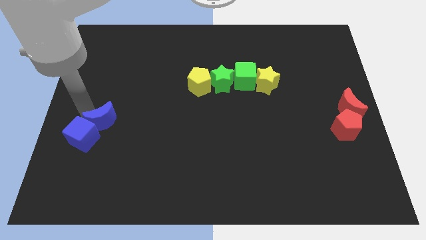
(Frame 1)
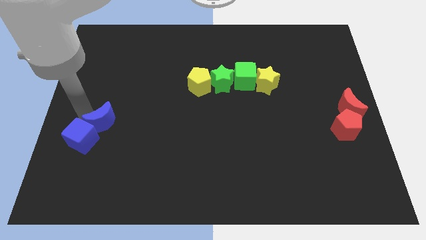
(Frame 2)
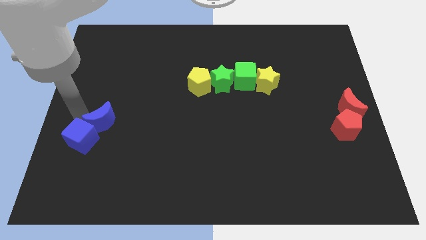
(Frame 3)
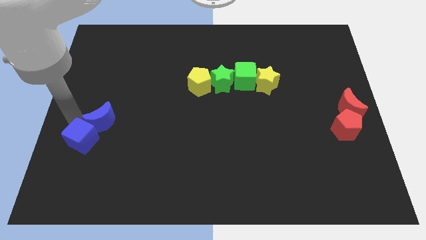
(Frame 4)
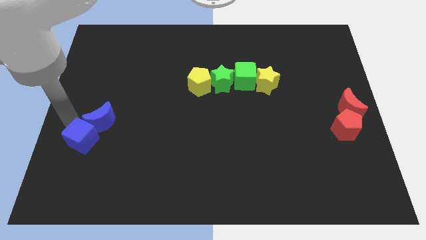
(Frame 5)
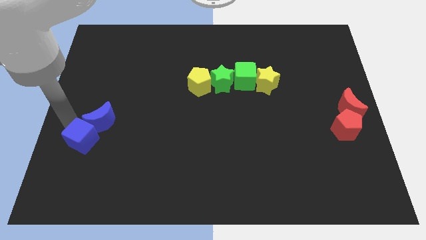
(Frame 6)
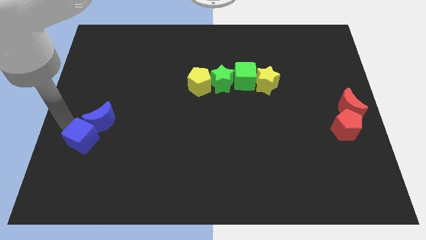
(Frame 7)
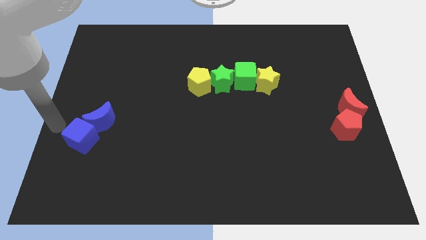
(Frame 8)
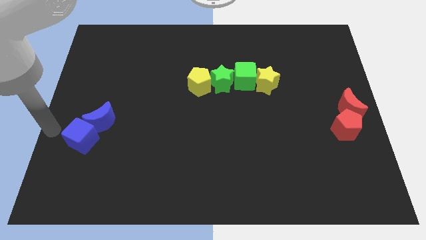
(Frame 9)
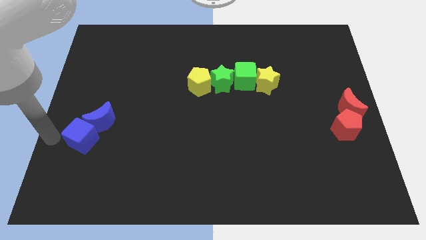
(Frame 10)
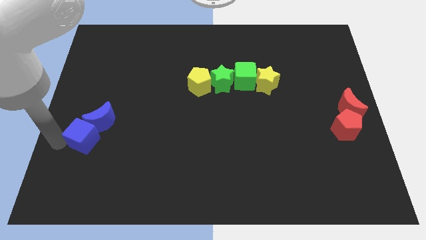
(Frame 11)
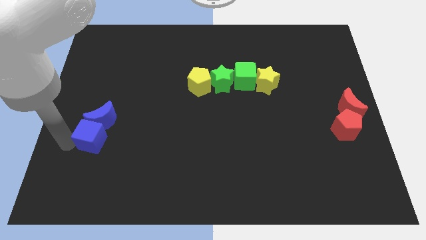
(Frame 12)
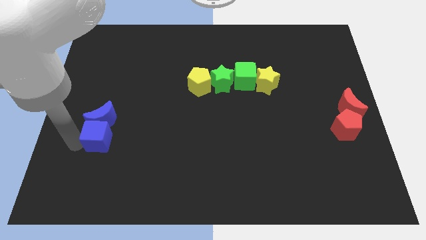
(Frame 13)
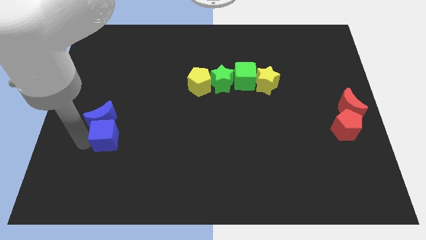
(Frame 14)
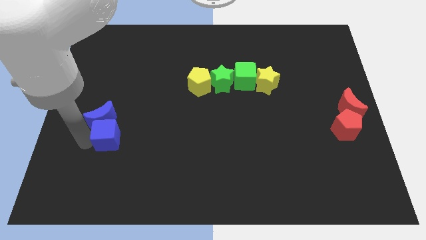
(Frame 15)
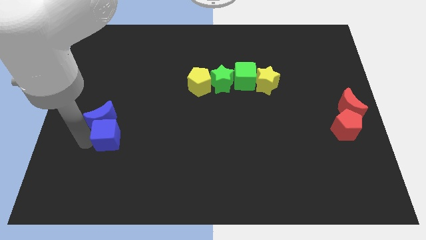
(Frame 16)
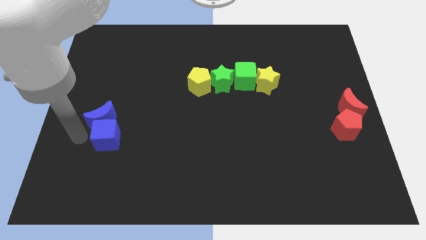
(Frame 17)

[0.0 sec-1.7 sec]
place the blue cube below the blue crescent

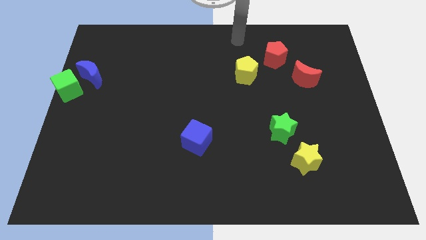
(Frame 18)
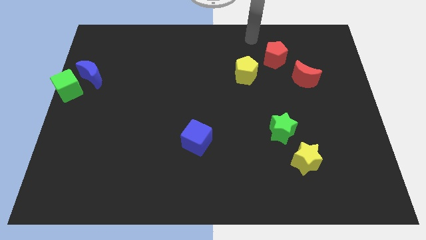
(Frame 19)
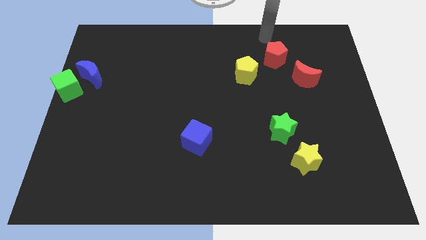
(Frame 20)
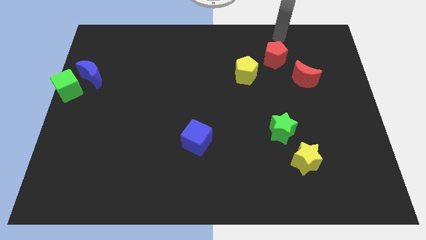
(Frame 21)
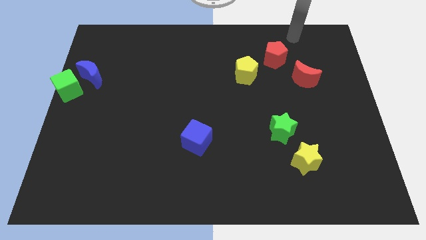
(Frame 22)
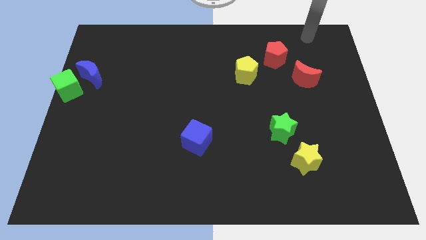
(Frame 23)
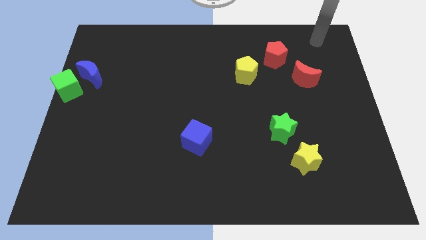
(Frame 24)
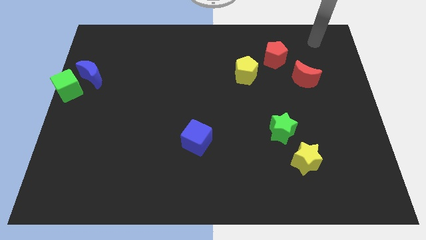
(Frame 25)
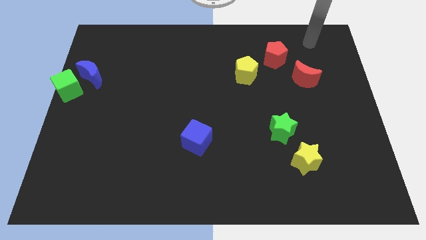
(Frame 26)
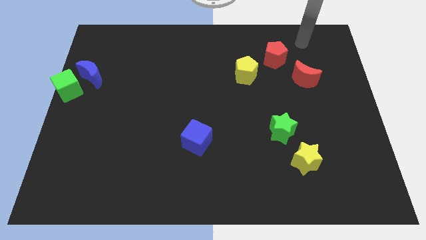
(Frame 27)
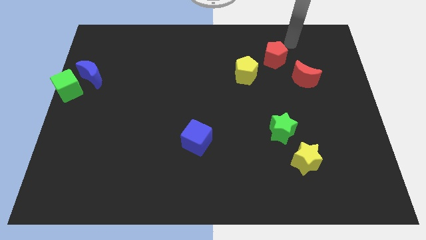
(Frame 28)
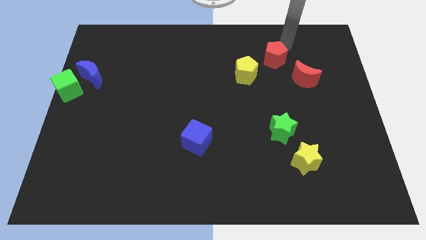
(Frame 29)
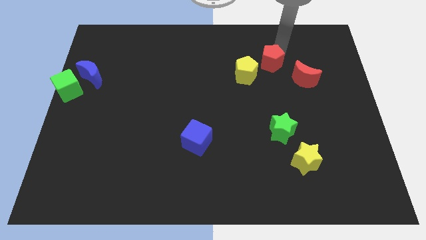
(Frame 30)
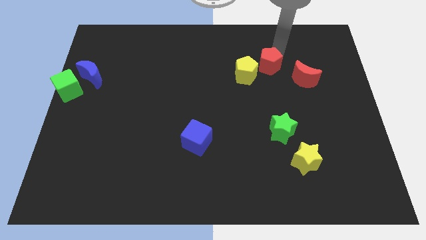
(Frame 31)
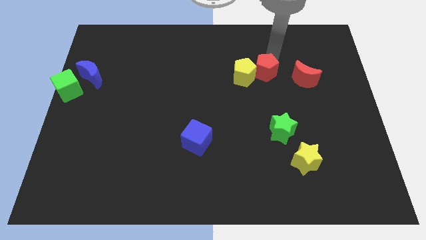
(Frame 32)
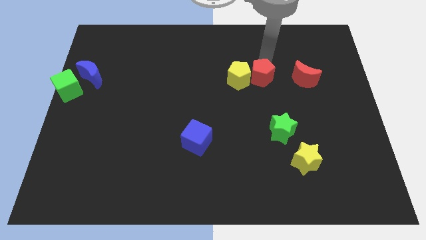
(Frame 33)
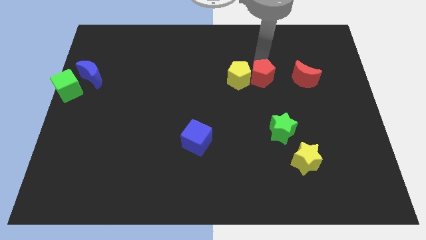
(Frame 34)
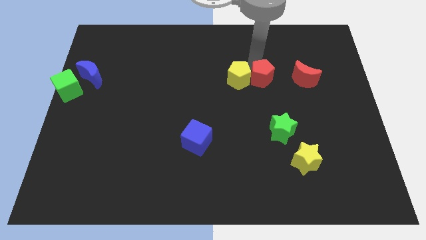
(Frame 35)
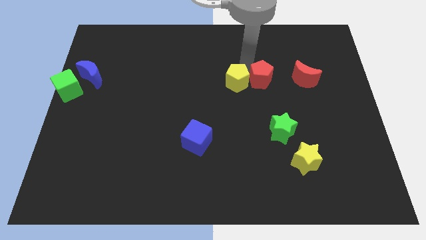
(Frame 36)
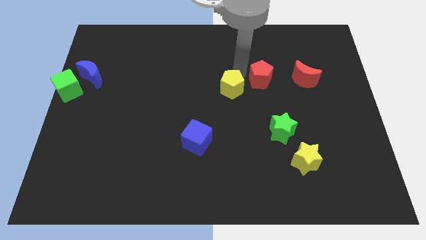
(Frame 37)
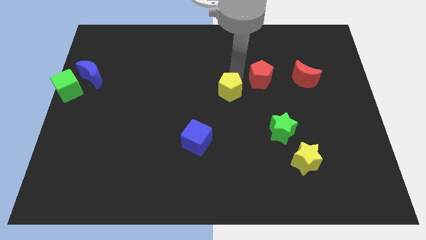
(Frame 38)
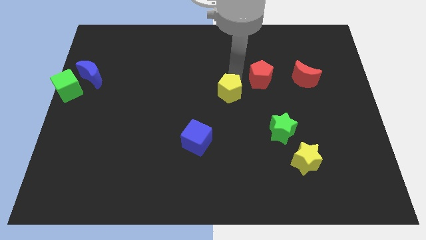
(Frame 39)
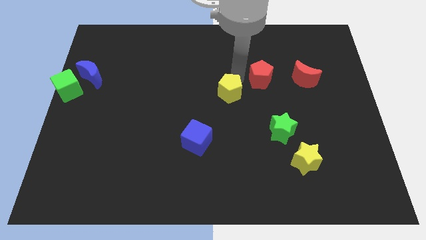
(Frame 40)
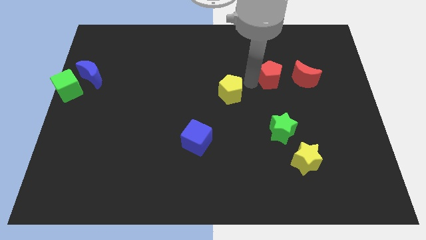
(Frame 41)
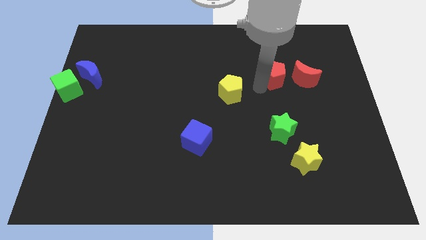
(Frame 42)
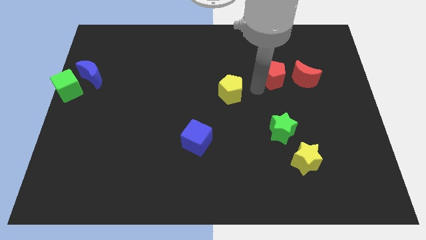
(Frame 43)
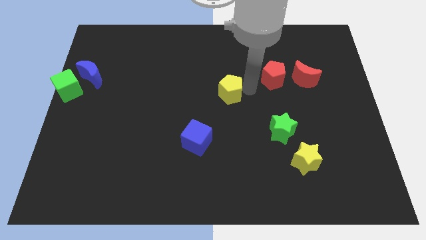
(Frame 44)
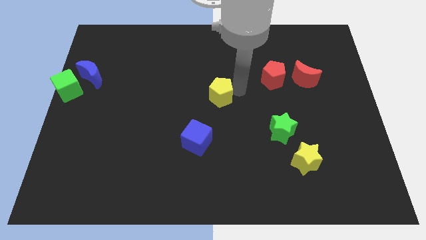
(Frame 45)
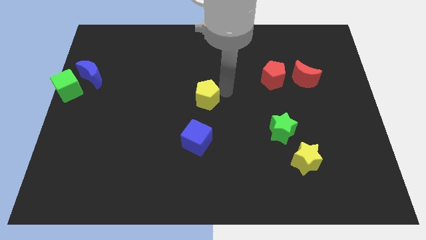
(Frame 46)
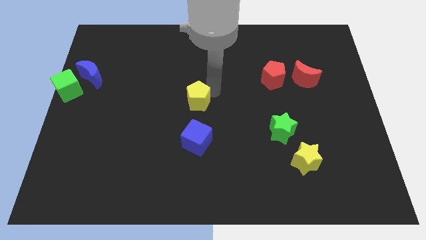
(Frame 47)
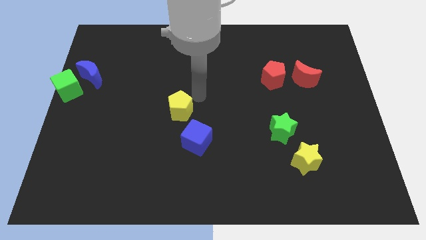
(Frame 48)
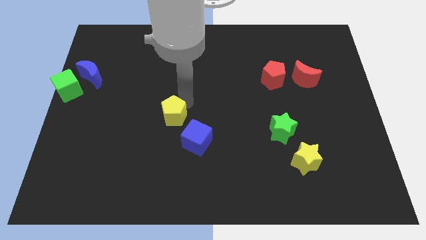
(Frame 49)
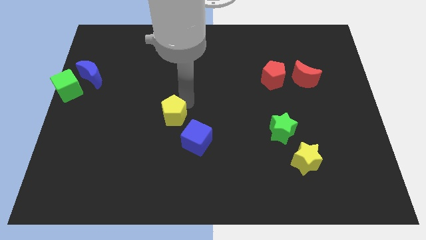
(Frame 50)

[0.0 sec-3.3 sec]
separate the yellow pentagon from the red pentagon

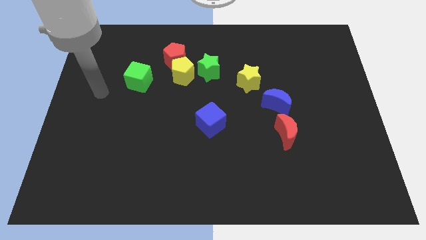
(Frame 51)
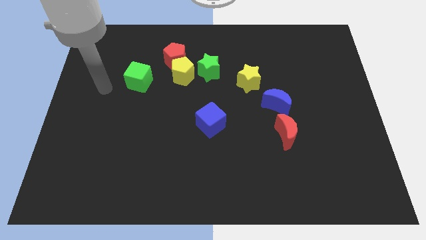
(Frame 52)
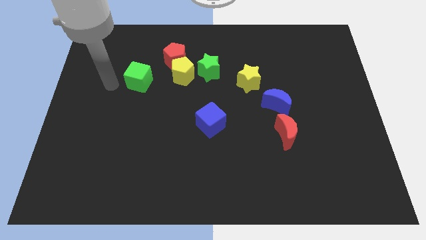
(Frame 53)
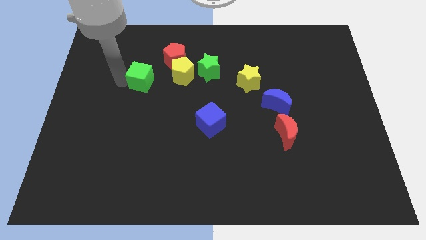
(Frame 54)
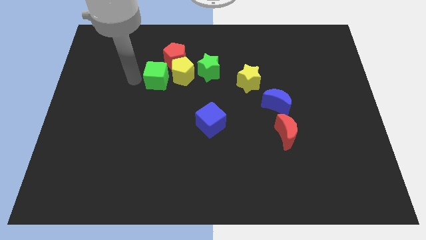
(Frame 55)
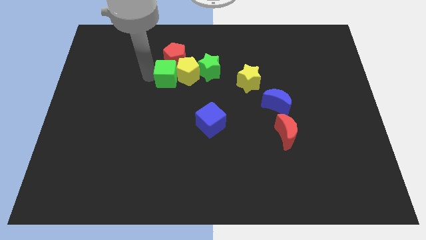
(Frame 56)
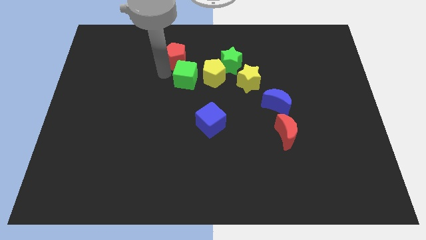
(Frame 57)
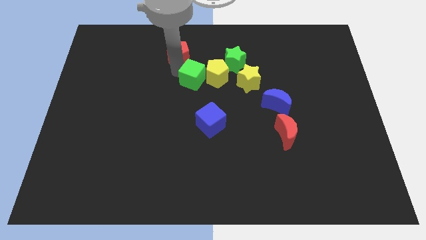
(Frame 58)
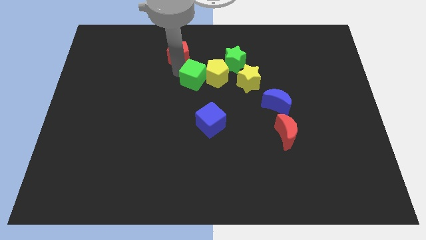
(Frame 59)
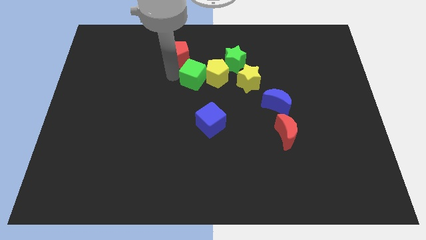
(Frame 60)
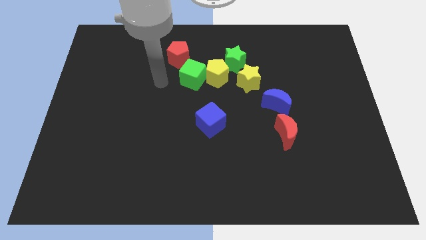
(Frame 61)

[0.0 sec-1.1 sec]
slide green cube into yellow pentagon

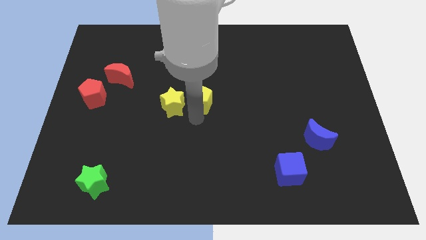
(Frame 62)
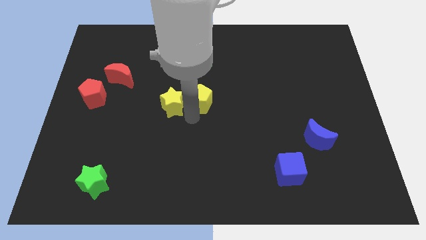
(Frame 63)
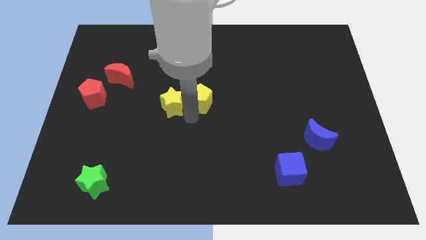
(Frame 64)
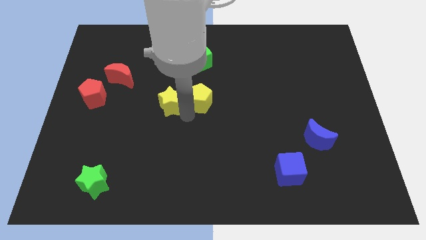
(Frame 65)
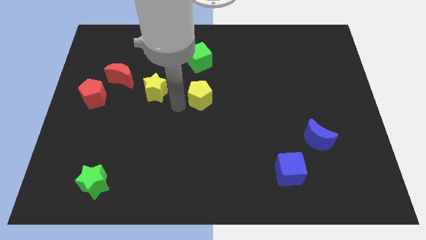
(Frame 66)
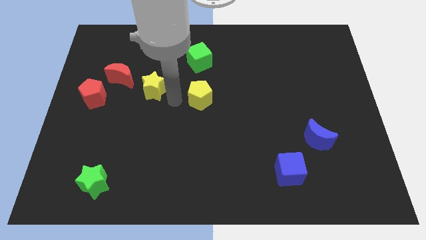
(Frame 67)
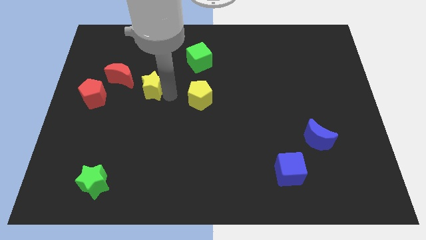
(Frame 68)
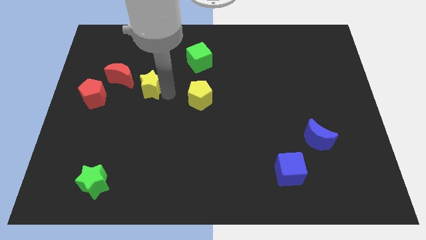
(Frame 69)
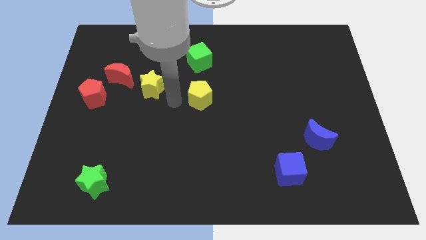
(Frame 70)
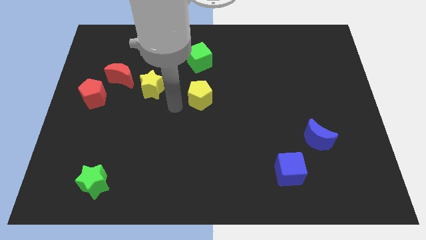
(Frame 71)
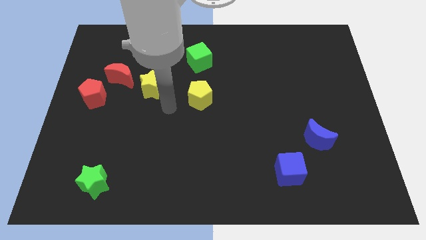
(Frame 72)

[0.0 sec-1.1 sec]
push the yellow star towards the red crescent

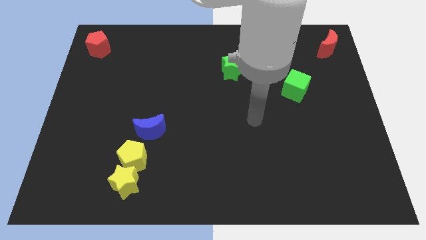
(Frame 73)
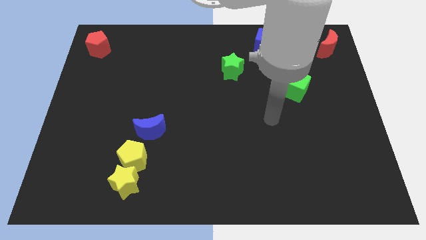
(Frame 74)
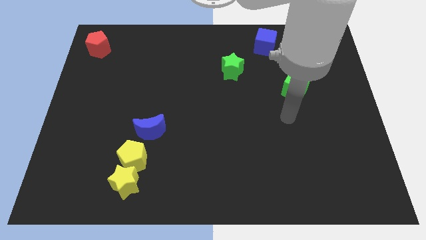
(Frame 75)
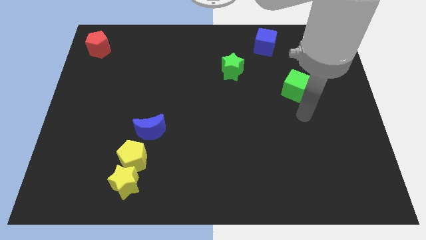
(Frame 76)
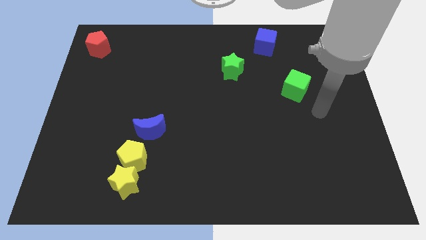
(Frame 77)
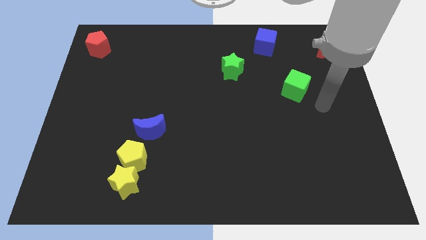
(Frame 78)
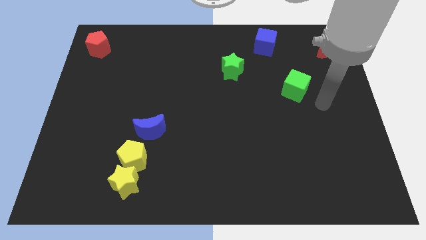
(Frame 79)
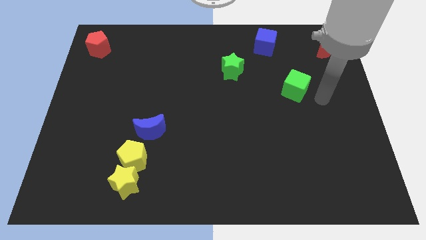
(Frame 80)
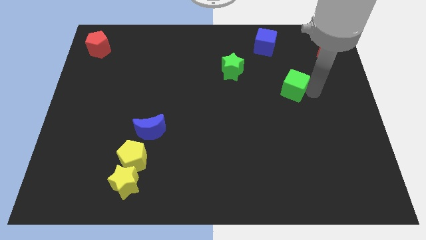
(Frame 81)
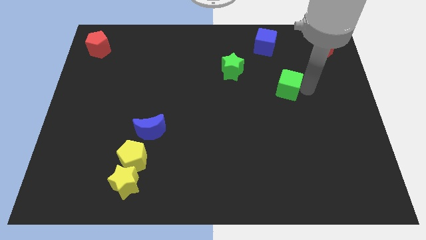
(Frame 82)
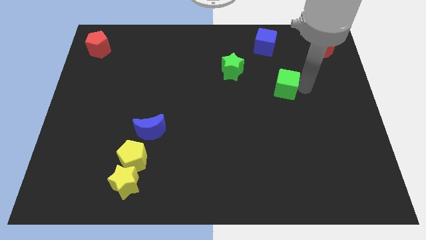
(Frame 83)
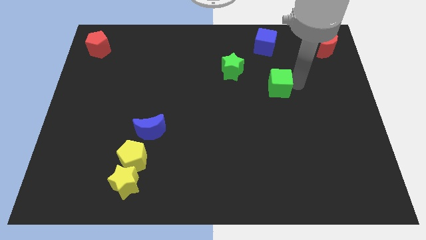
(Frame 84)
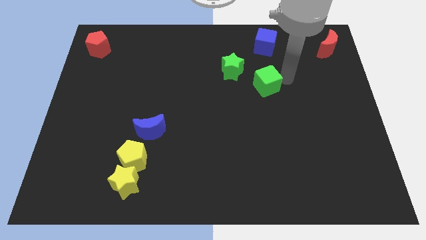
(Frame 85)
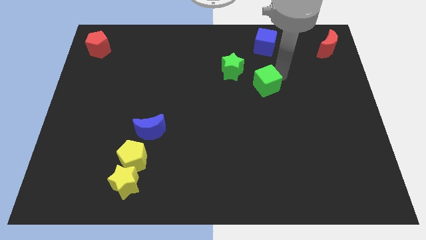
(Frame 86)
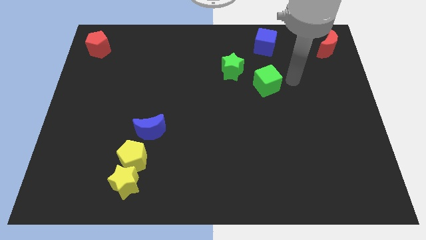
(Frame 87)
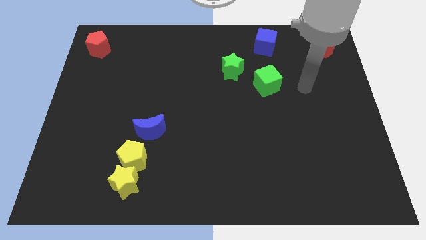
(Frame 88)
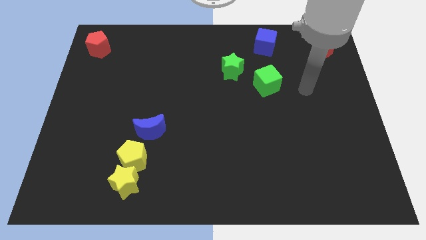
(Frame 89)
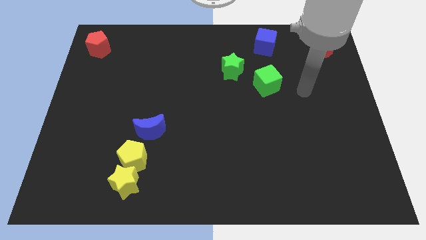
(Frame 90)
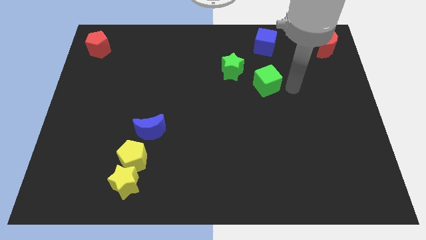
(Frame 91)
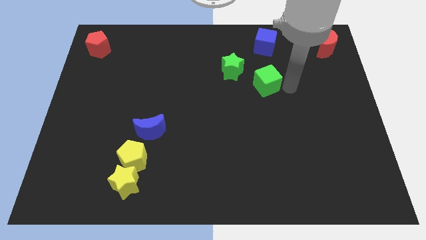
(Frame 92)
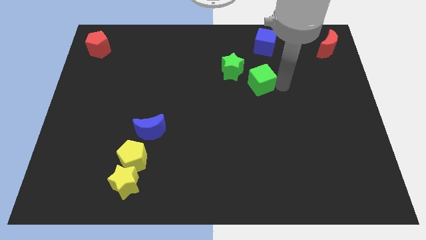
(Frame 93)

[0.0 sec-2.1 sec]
slide the green cube vertically below the blue cube
